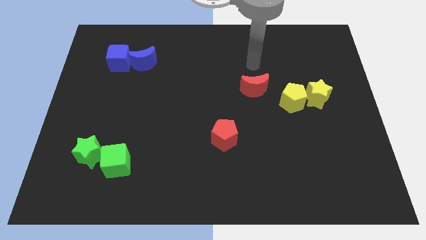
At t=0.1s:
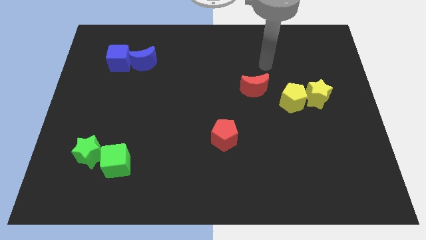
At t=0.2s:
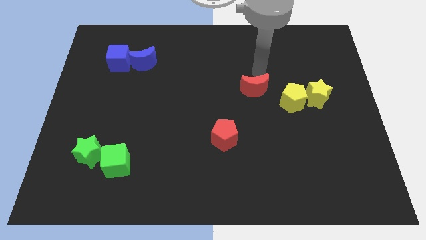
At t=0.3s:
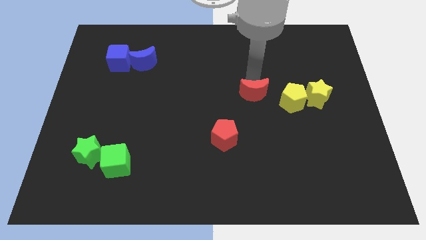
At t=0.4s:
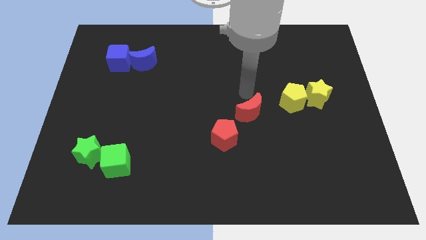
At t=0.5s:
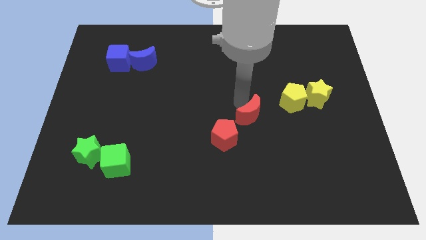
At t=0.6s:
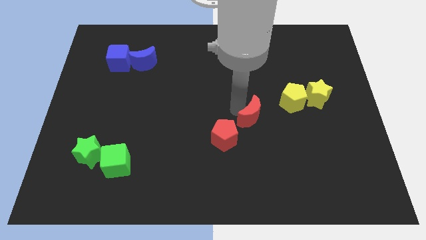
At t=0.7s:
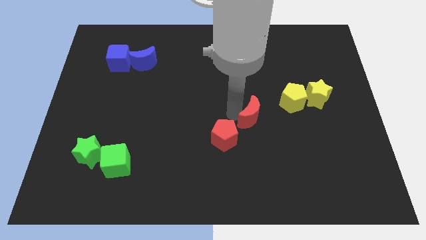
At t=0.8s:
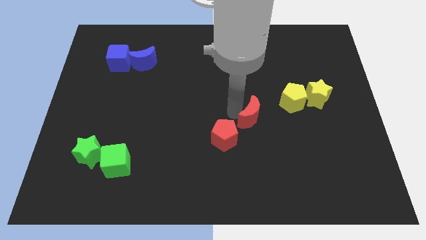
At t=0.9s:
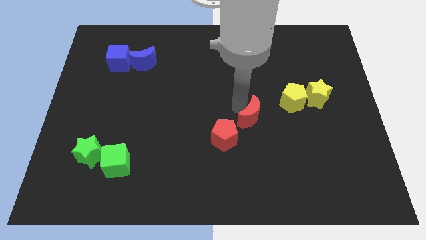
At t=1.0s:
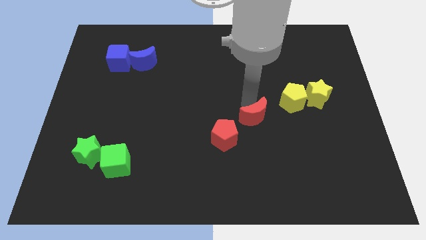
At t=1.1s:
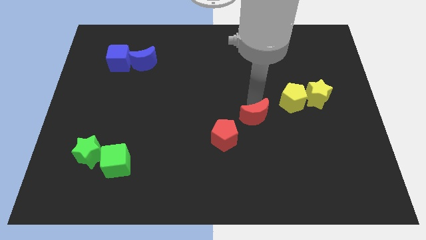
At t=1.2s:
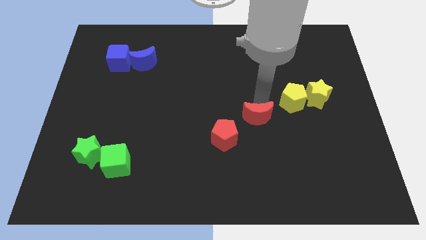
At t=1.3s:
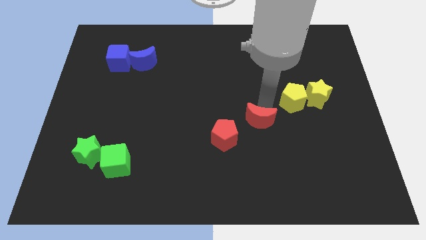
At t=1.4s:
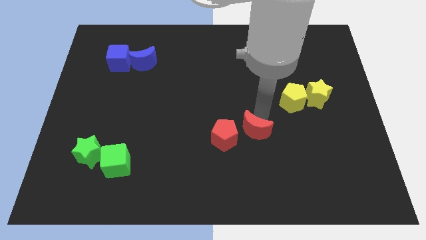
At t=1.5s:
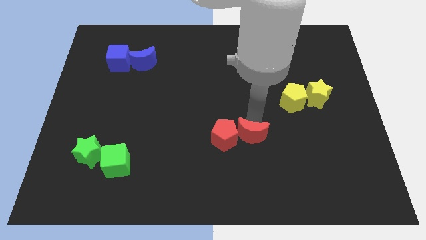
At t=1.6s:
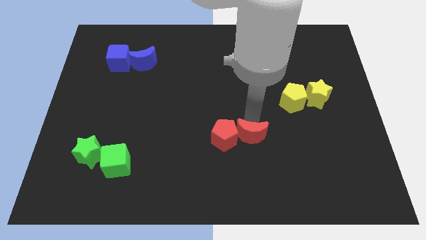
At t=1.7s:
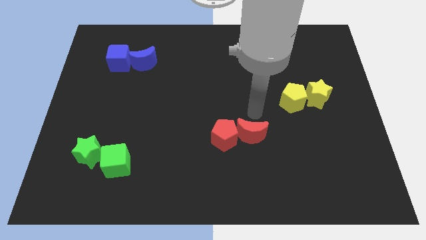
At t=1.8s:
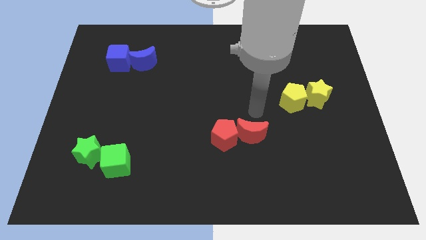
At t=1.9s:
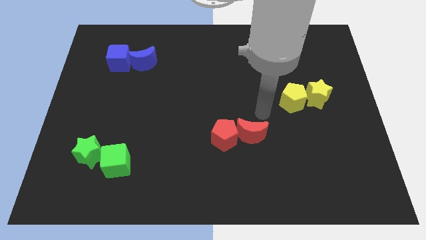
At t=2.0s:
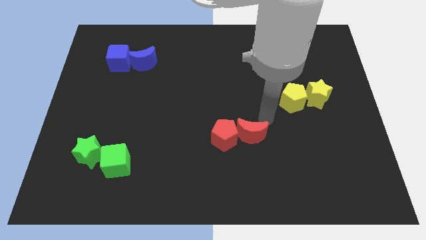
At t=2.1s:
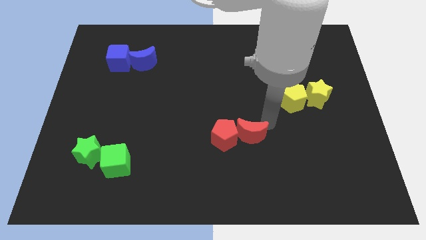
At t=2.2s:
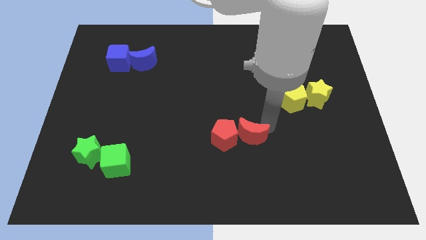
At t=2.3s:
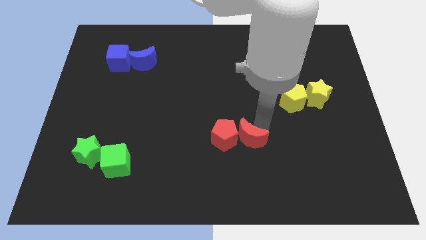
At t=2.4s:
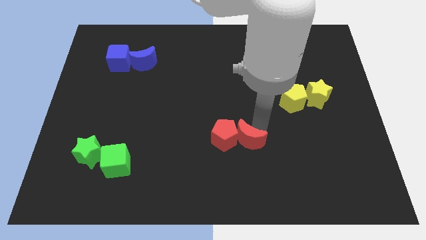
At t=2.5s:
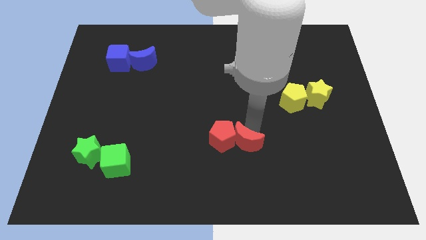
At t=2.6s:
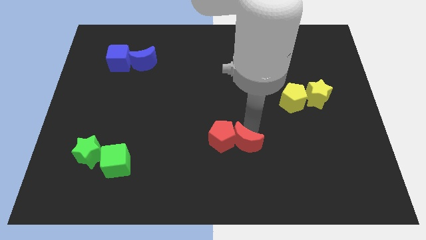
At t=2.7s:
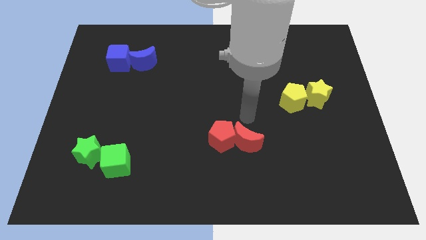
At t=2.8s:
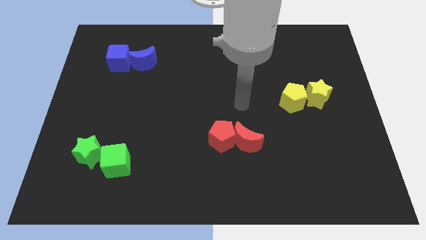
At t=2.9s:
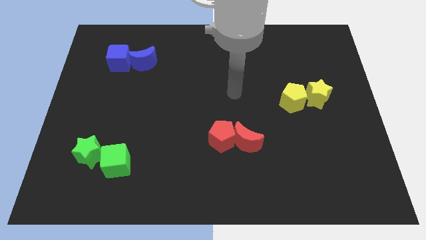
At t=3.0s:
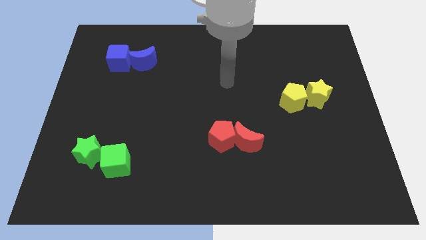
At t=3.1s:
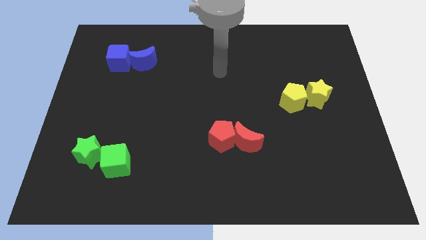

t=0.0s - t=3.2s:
drag red moon into red pentagon

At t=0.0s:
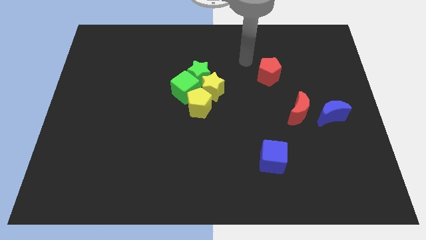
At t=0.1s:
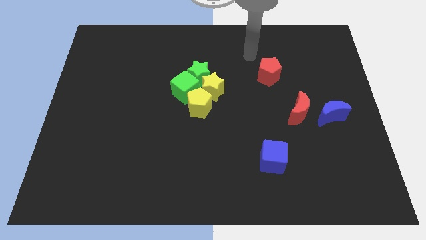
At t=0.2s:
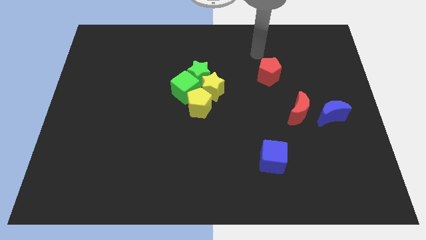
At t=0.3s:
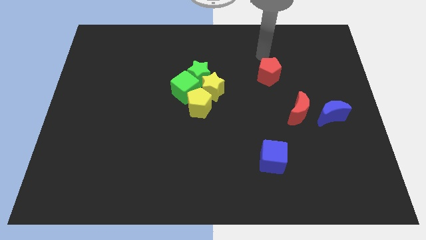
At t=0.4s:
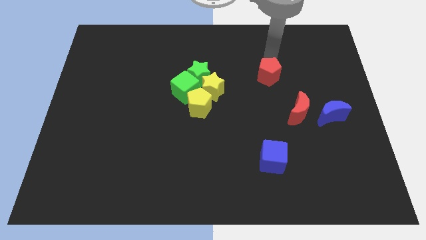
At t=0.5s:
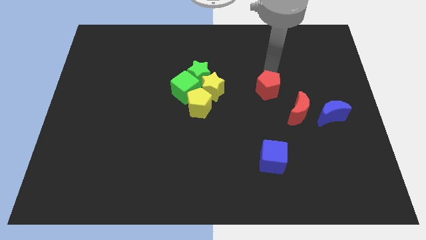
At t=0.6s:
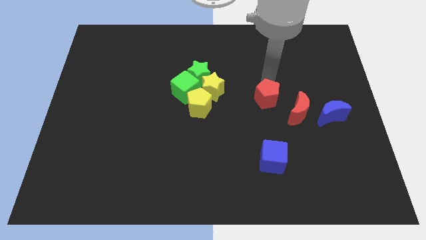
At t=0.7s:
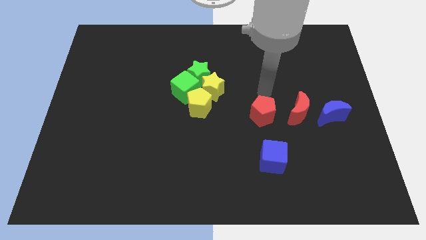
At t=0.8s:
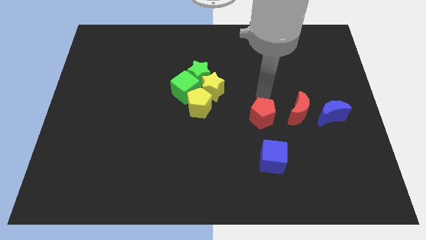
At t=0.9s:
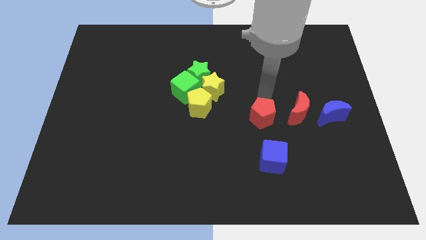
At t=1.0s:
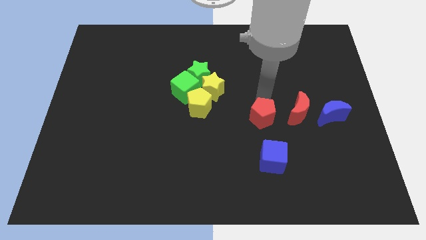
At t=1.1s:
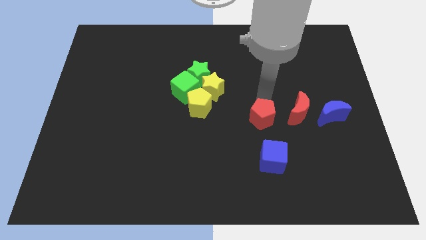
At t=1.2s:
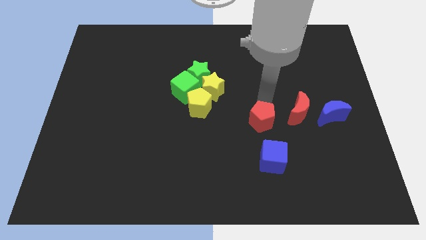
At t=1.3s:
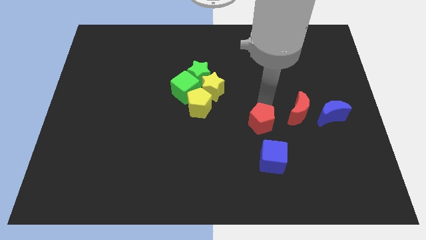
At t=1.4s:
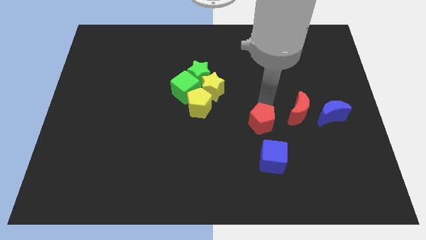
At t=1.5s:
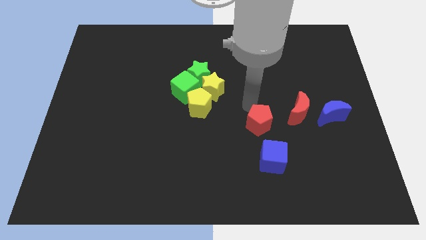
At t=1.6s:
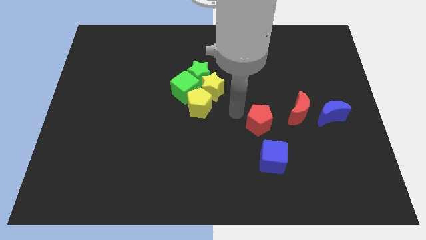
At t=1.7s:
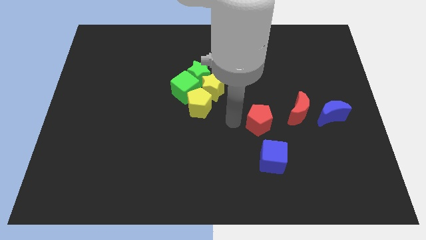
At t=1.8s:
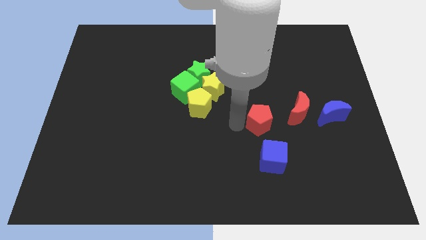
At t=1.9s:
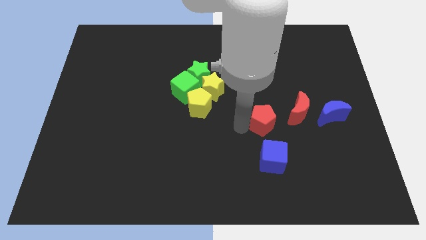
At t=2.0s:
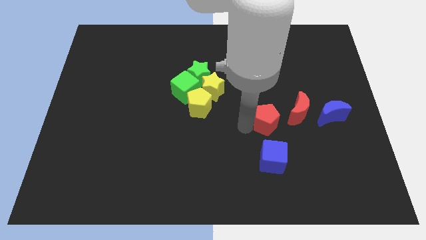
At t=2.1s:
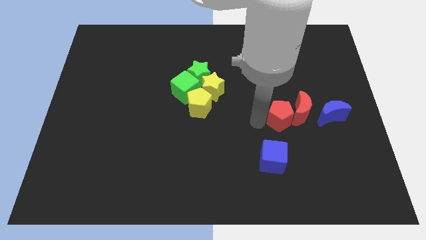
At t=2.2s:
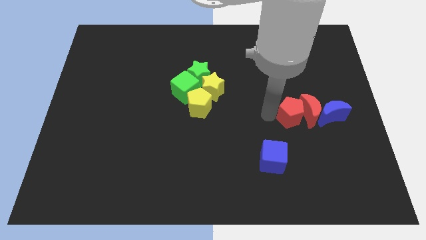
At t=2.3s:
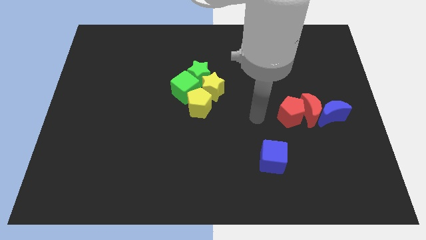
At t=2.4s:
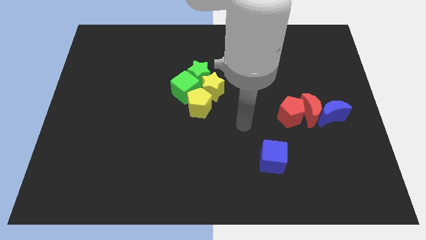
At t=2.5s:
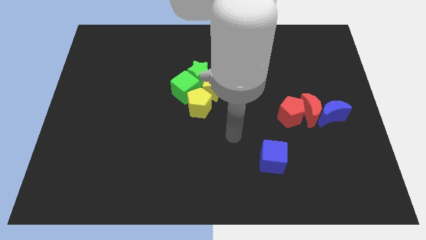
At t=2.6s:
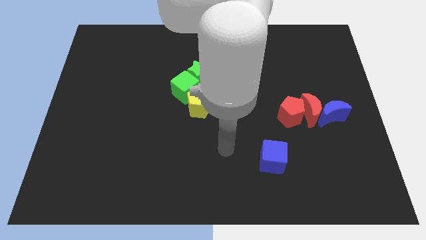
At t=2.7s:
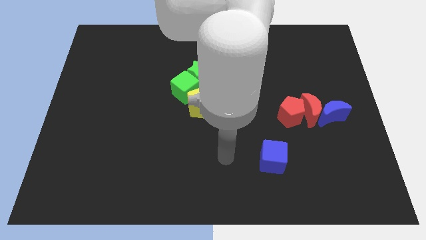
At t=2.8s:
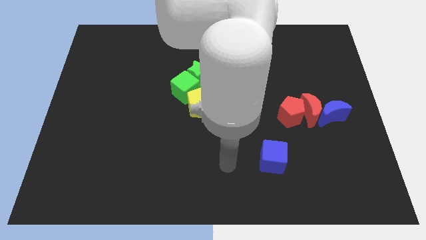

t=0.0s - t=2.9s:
move the red pentagon into the red moon

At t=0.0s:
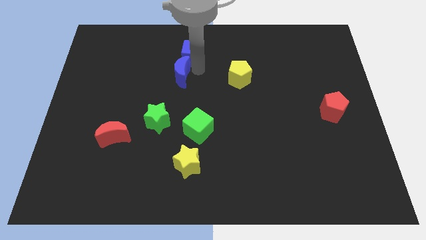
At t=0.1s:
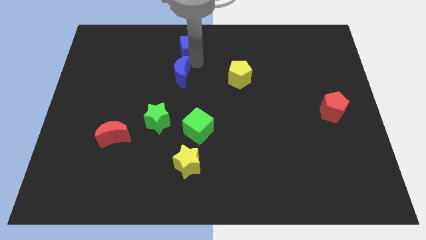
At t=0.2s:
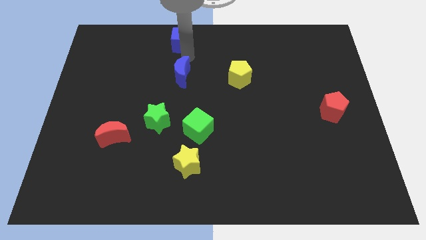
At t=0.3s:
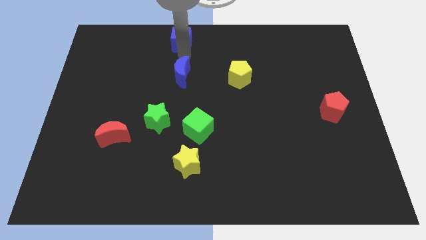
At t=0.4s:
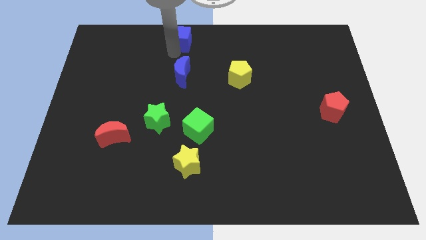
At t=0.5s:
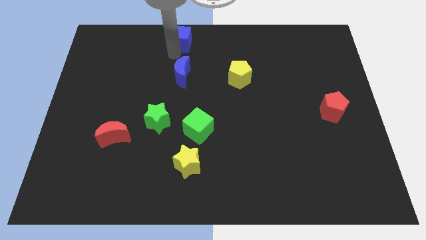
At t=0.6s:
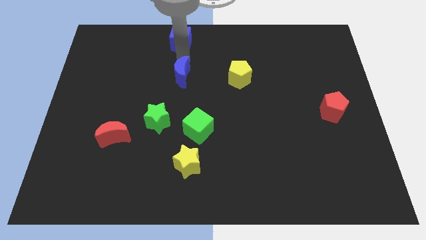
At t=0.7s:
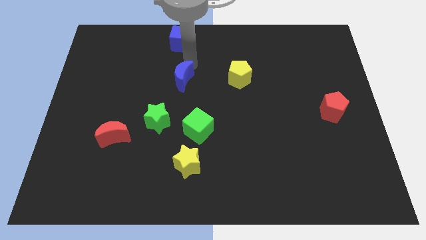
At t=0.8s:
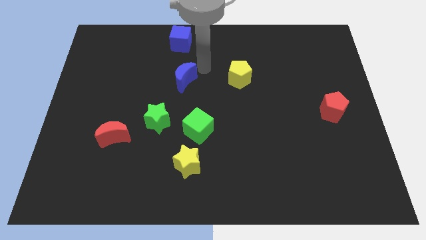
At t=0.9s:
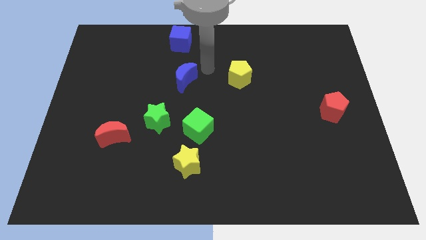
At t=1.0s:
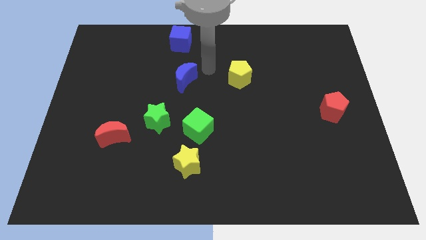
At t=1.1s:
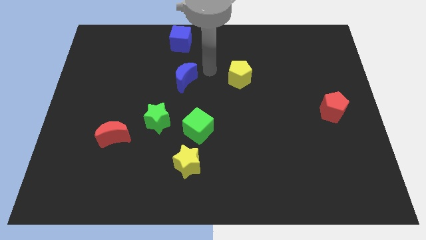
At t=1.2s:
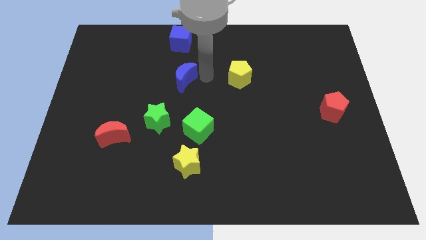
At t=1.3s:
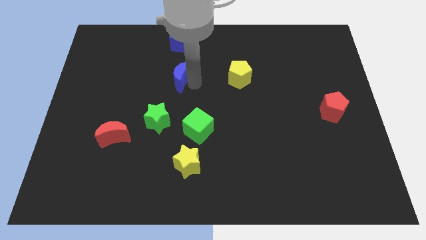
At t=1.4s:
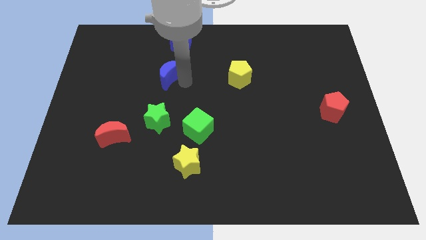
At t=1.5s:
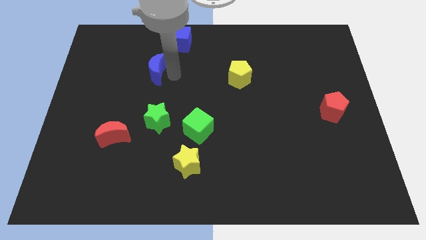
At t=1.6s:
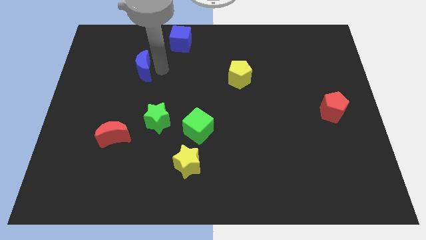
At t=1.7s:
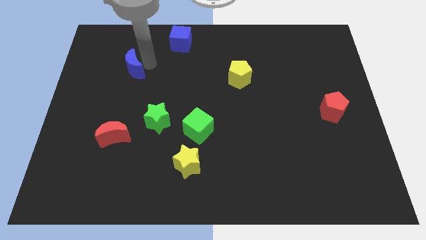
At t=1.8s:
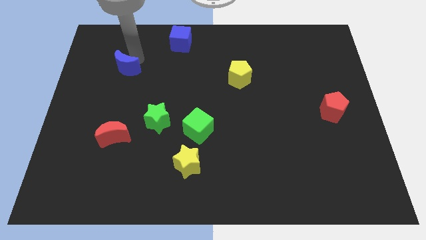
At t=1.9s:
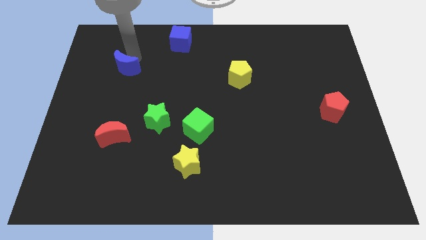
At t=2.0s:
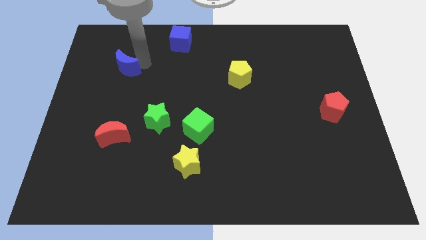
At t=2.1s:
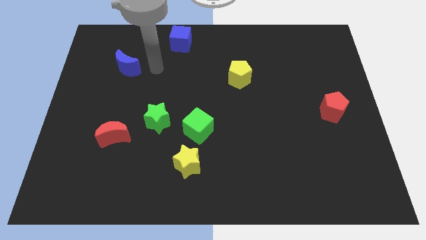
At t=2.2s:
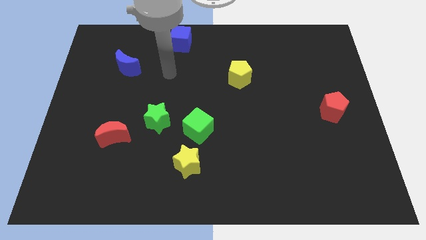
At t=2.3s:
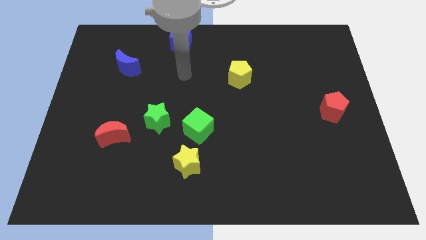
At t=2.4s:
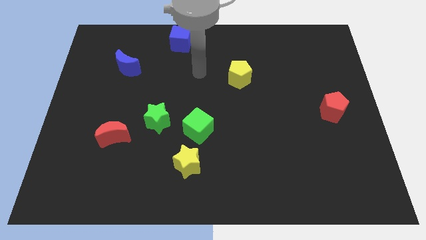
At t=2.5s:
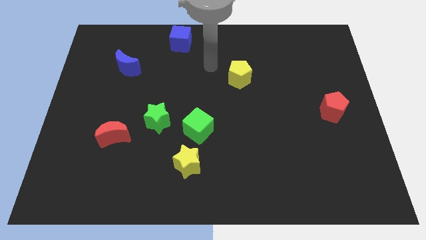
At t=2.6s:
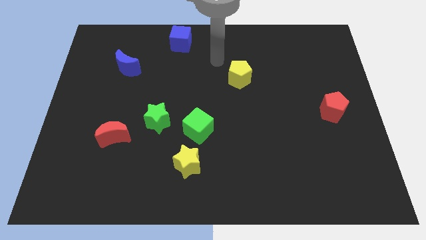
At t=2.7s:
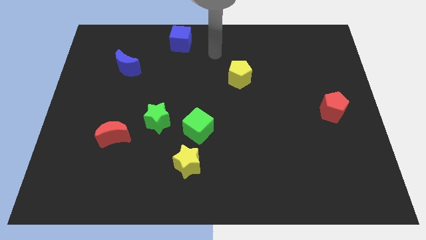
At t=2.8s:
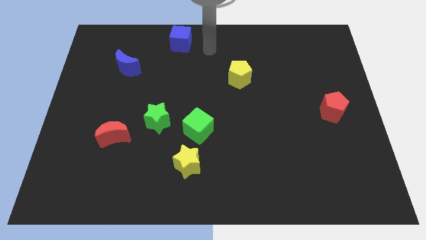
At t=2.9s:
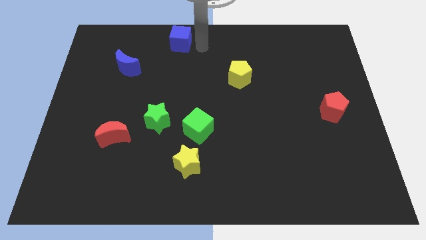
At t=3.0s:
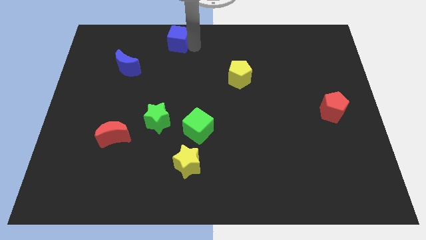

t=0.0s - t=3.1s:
place the blue crescent above the red crescent
